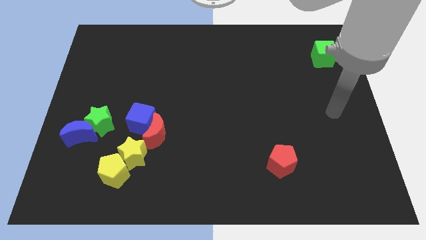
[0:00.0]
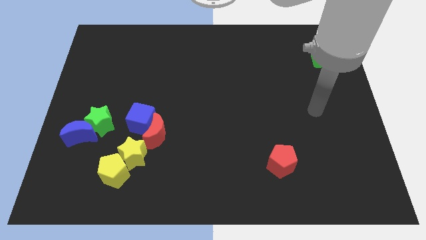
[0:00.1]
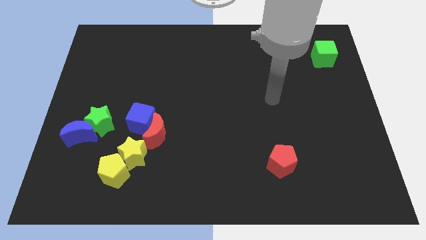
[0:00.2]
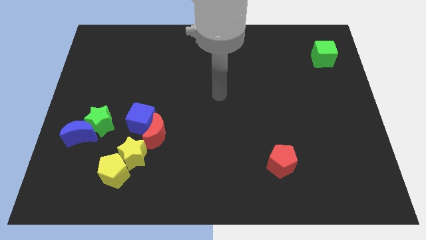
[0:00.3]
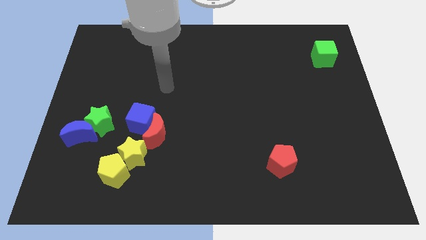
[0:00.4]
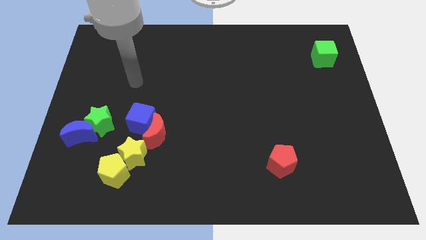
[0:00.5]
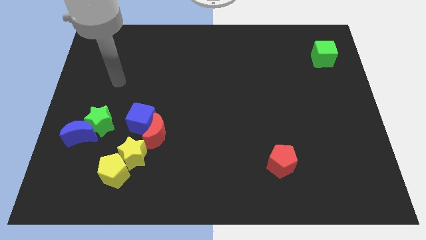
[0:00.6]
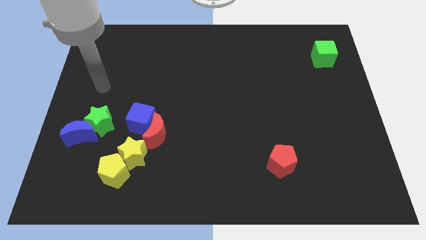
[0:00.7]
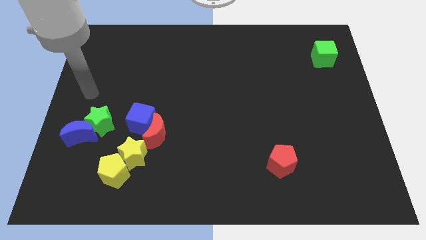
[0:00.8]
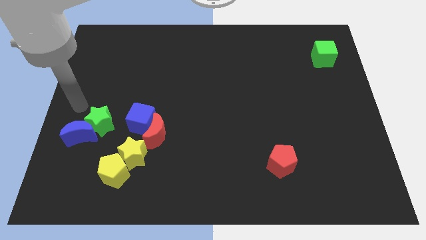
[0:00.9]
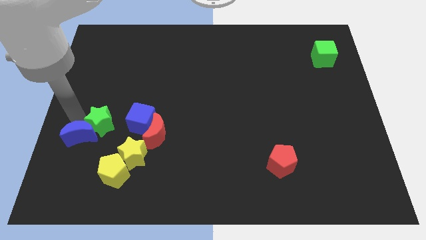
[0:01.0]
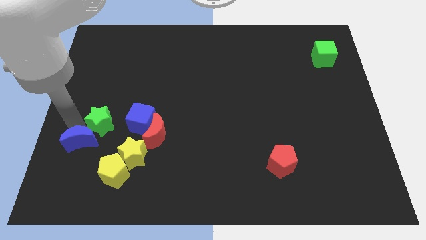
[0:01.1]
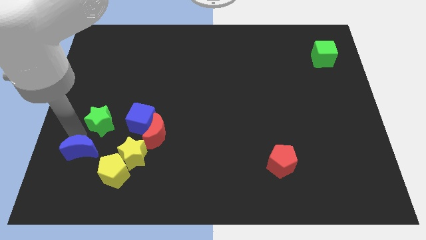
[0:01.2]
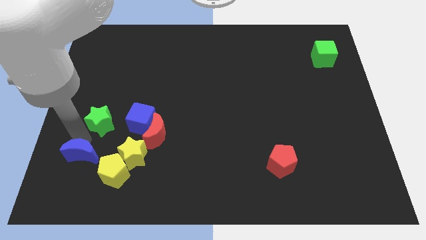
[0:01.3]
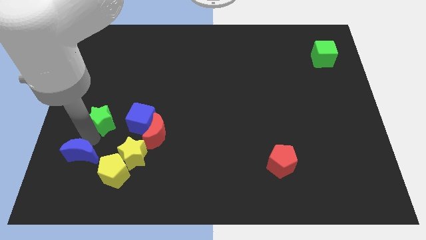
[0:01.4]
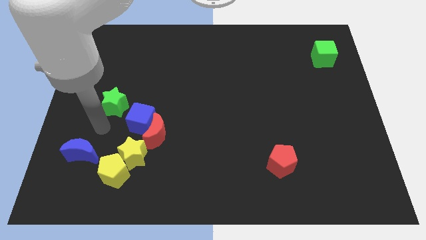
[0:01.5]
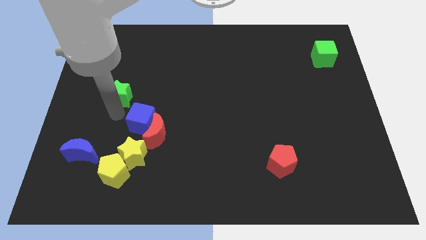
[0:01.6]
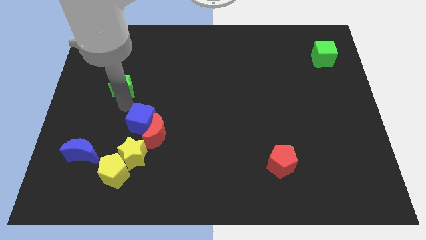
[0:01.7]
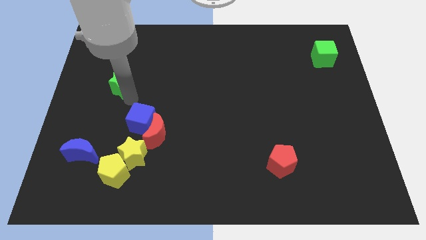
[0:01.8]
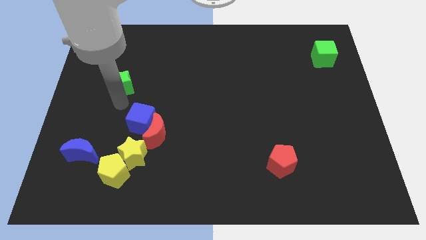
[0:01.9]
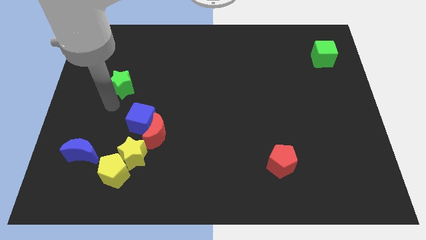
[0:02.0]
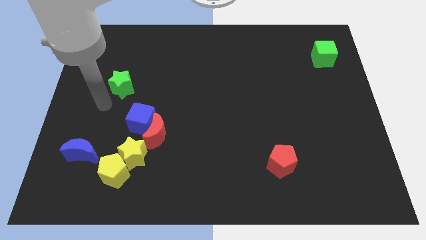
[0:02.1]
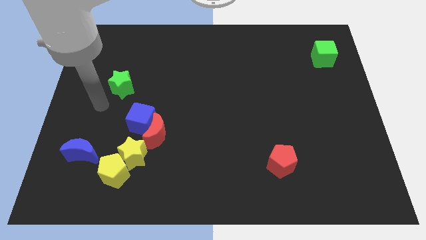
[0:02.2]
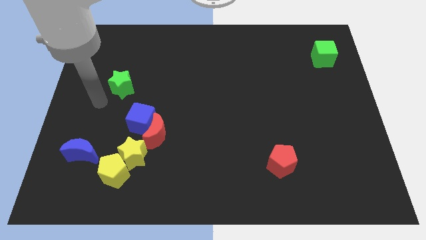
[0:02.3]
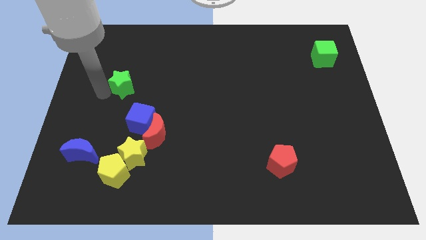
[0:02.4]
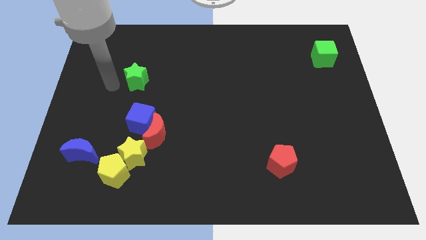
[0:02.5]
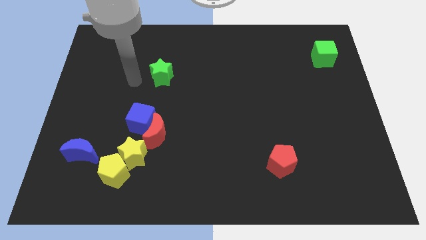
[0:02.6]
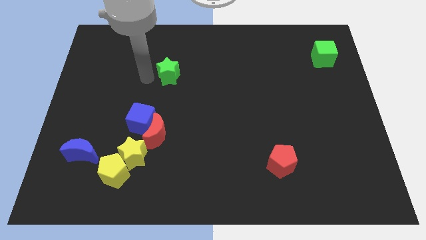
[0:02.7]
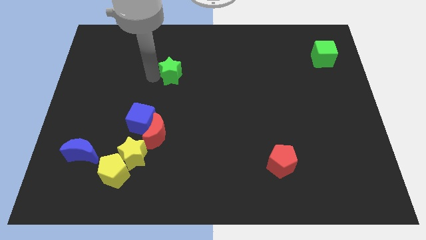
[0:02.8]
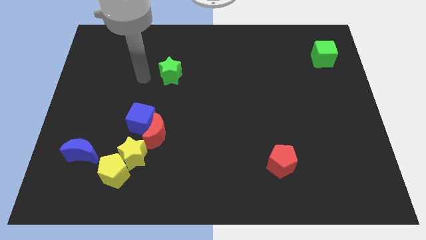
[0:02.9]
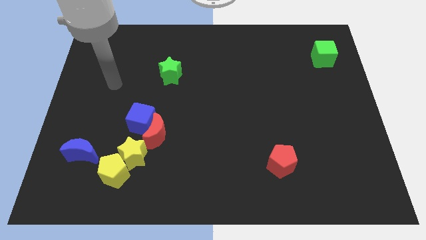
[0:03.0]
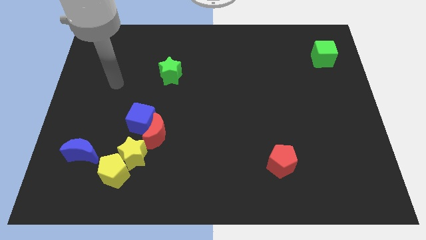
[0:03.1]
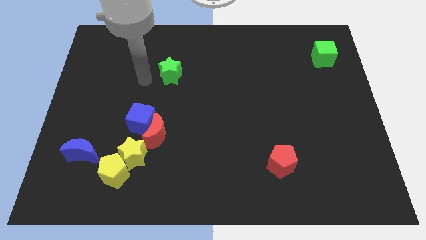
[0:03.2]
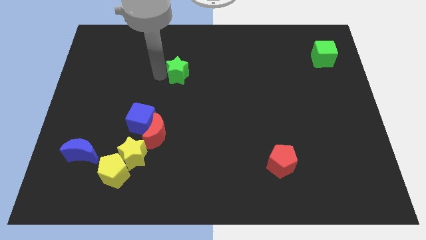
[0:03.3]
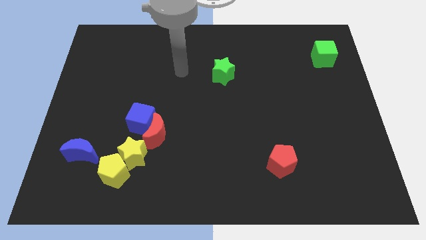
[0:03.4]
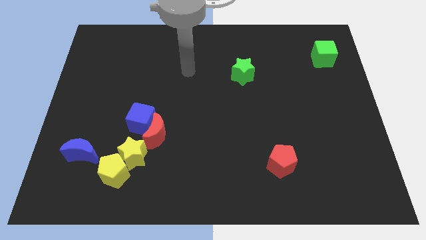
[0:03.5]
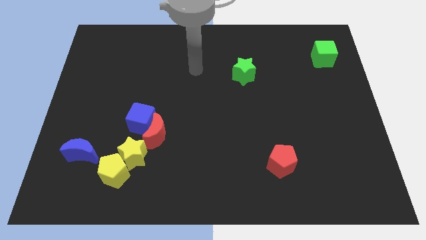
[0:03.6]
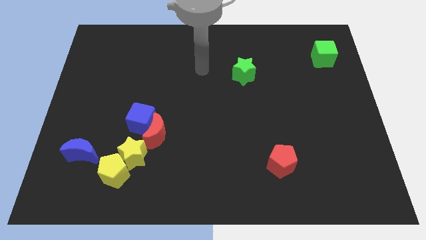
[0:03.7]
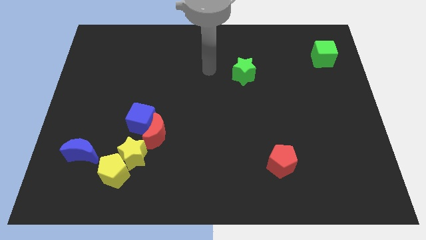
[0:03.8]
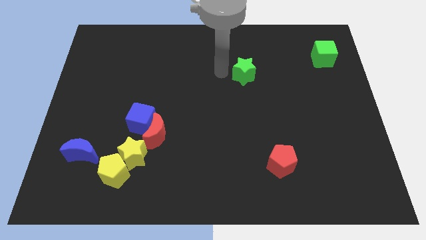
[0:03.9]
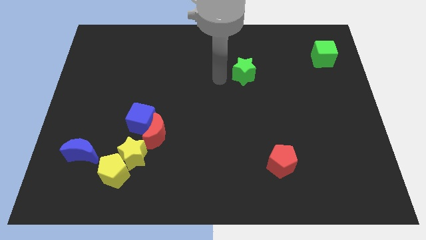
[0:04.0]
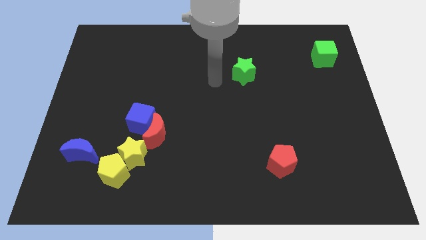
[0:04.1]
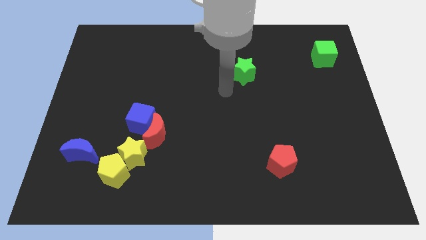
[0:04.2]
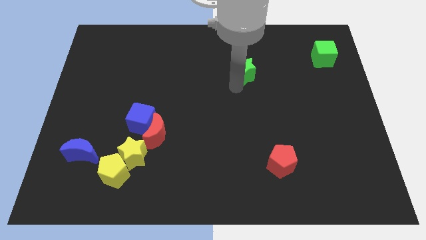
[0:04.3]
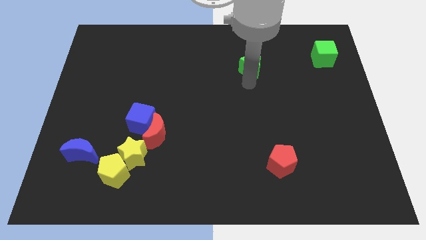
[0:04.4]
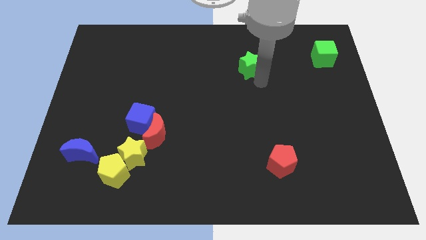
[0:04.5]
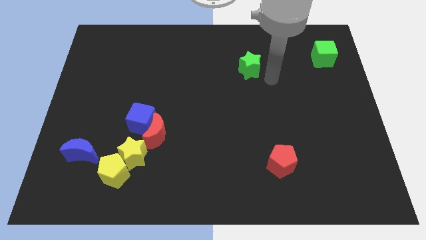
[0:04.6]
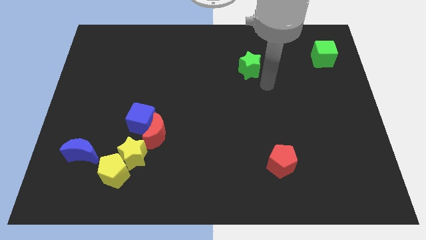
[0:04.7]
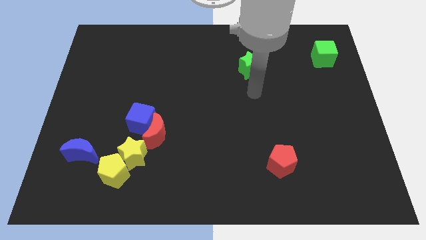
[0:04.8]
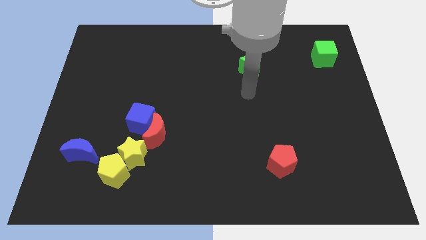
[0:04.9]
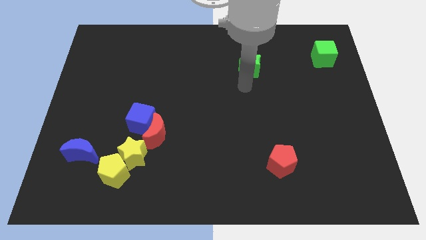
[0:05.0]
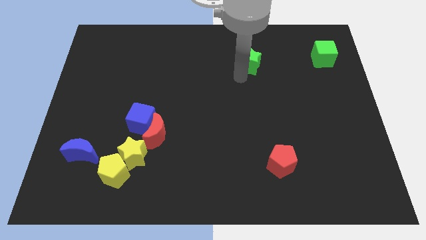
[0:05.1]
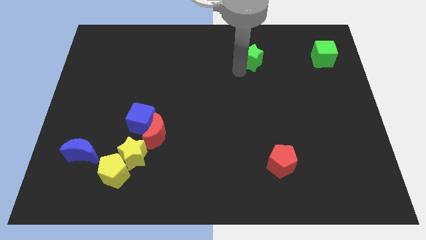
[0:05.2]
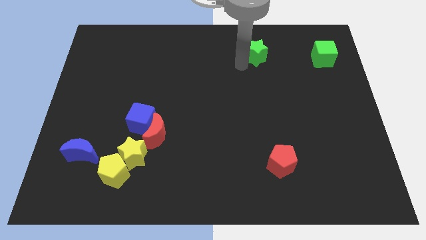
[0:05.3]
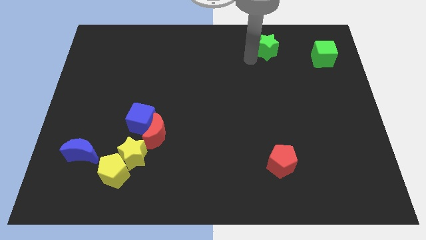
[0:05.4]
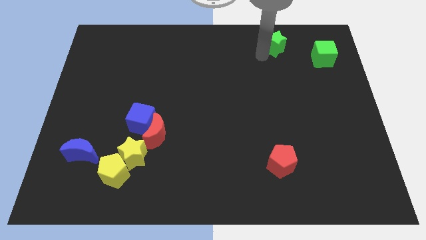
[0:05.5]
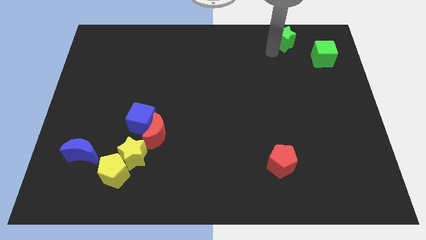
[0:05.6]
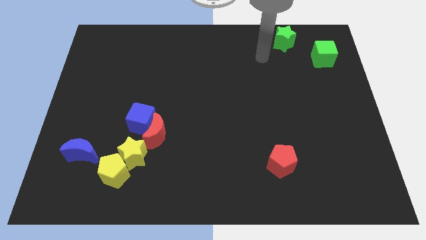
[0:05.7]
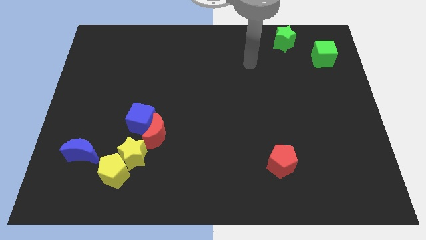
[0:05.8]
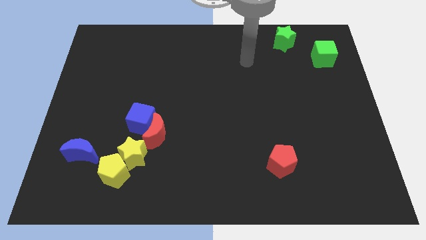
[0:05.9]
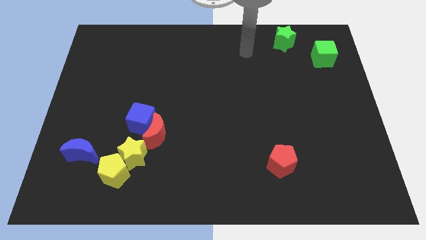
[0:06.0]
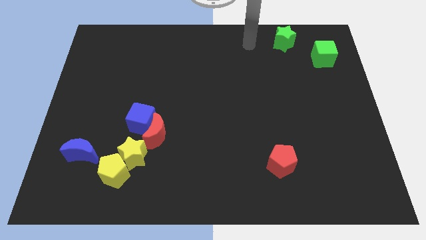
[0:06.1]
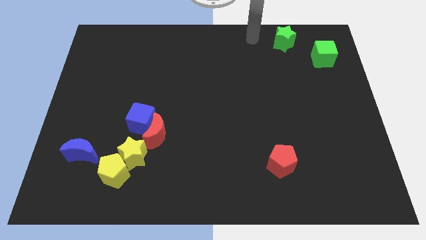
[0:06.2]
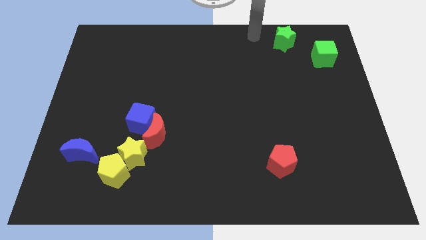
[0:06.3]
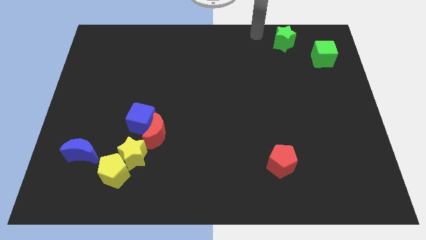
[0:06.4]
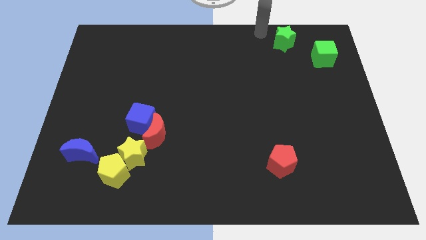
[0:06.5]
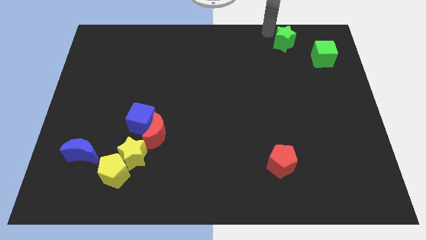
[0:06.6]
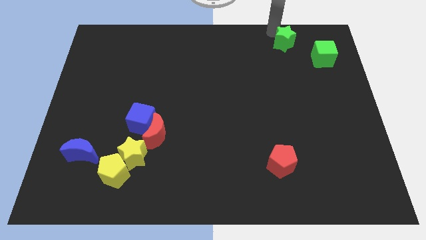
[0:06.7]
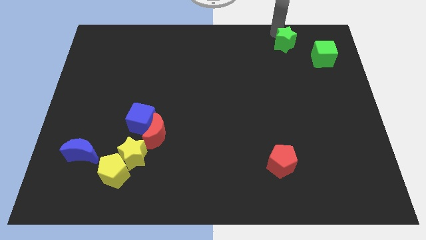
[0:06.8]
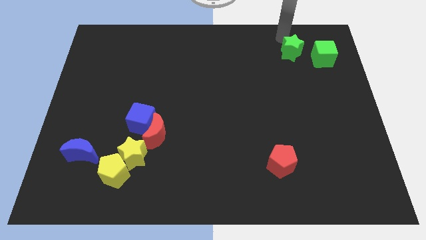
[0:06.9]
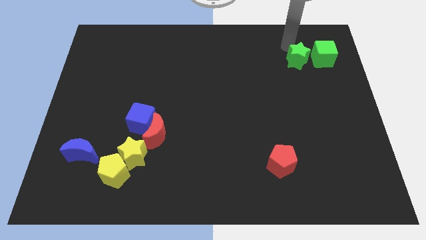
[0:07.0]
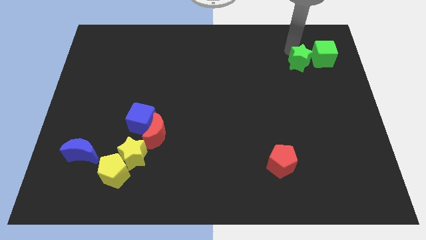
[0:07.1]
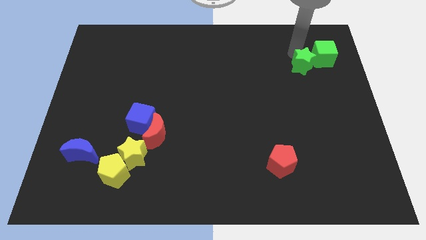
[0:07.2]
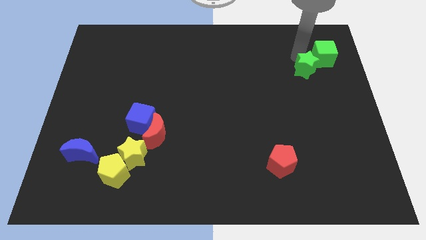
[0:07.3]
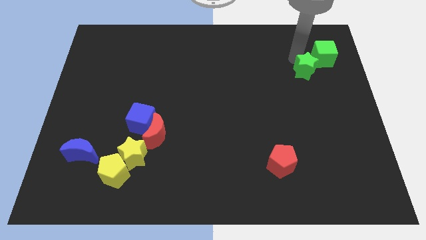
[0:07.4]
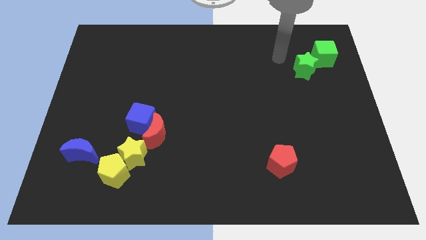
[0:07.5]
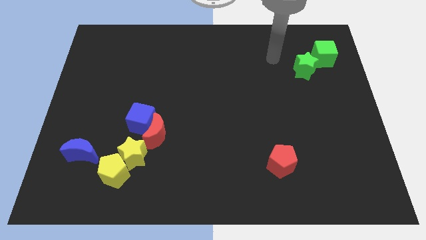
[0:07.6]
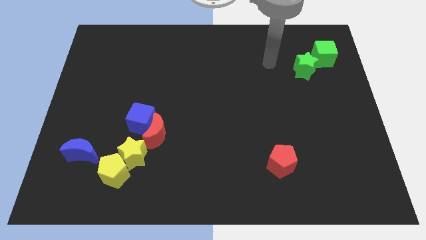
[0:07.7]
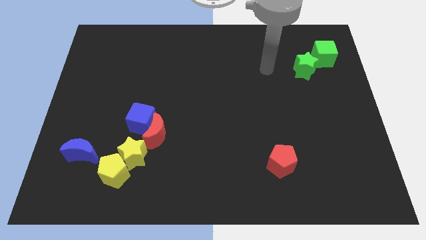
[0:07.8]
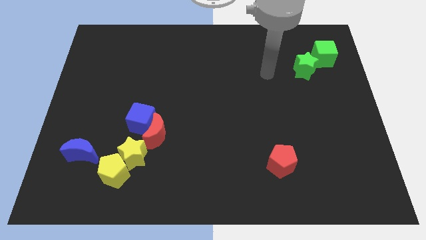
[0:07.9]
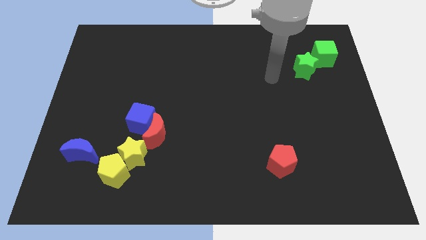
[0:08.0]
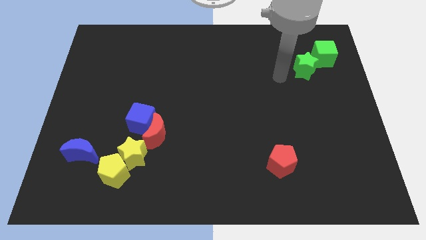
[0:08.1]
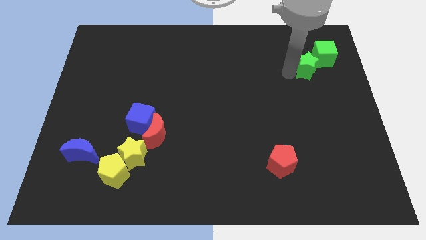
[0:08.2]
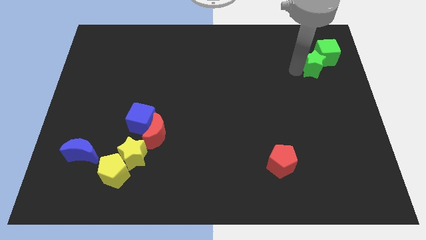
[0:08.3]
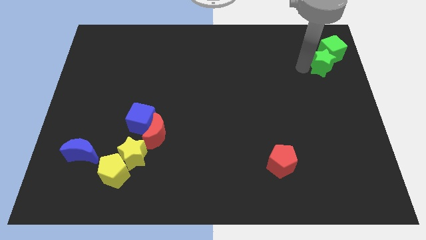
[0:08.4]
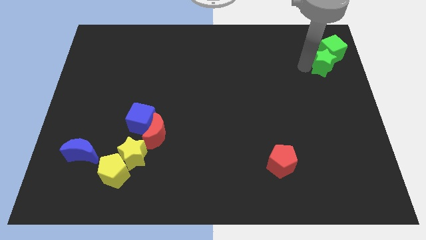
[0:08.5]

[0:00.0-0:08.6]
push the green star next to the green cube

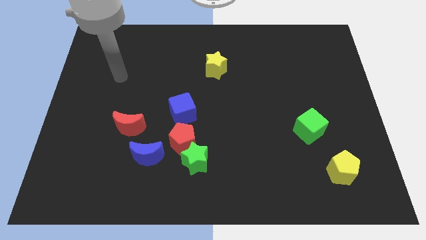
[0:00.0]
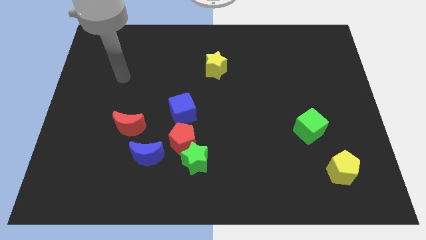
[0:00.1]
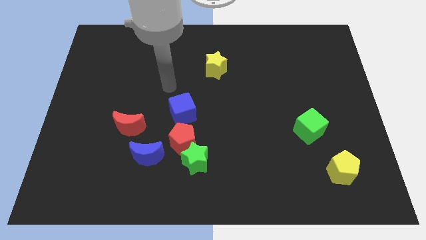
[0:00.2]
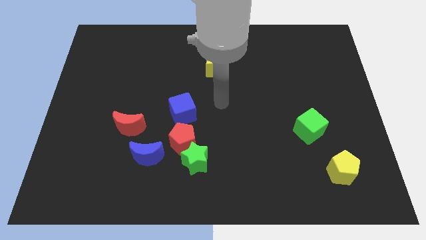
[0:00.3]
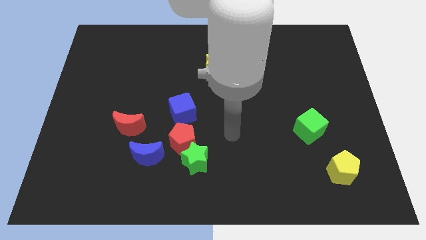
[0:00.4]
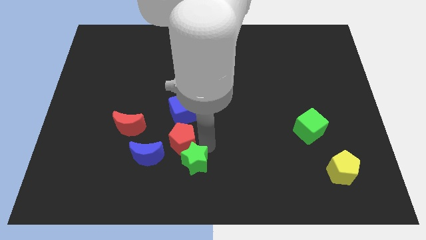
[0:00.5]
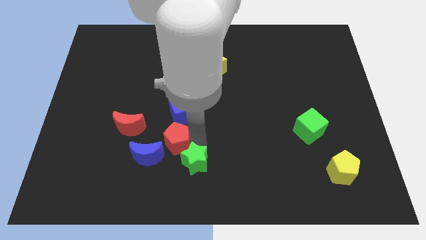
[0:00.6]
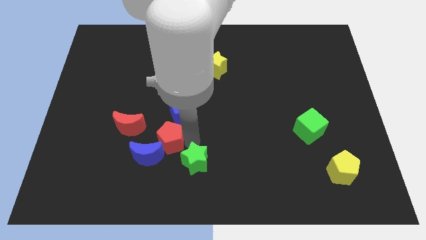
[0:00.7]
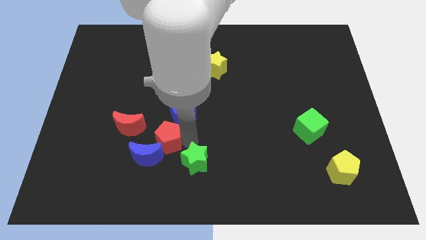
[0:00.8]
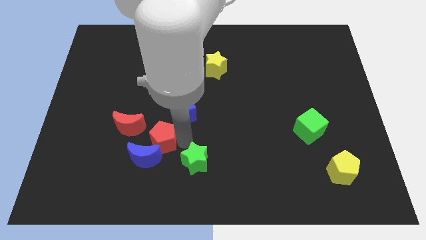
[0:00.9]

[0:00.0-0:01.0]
push the red pentagon close to the blue moon
